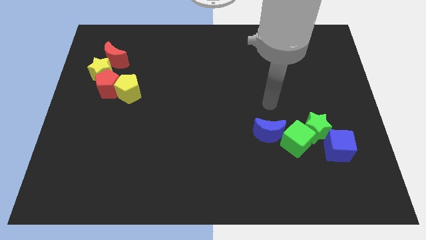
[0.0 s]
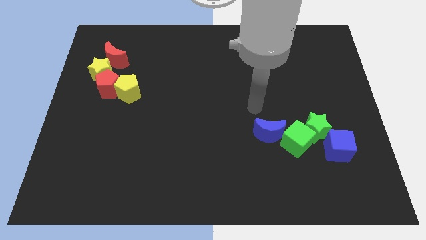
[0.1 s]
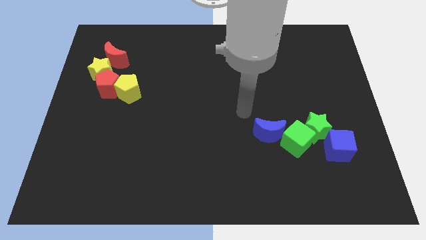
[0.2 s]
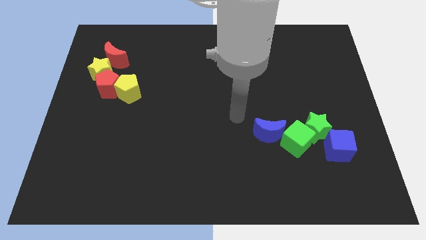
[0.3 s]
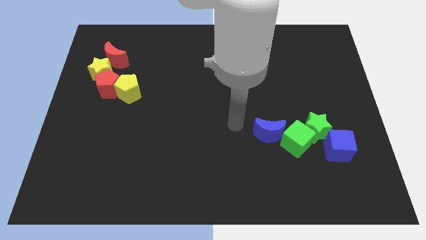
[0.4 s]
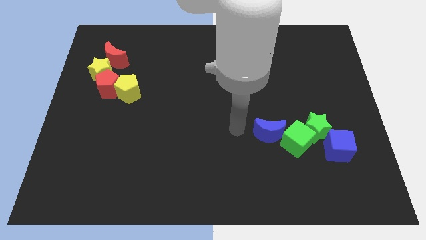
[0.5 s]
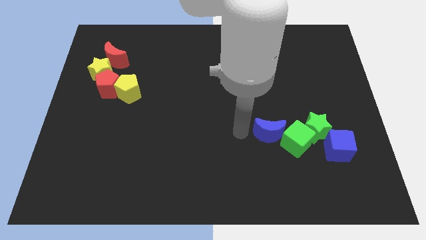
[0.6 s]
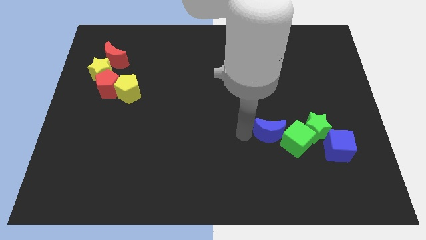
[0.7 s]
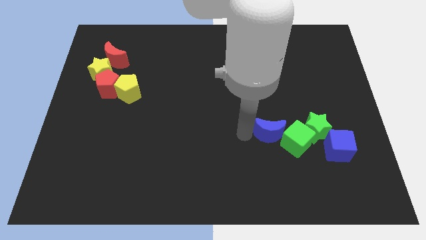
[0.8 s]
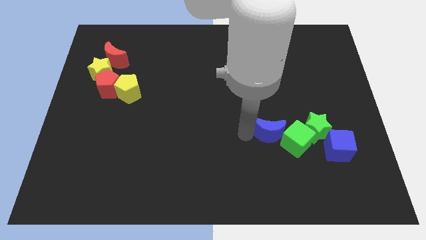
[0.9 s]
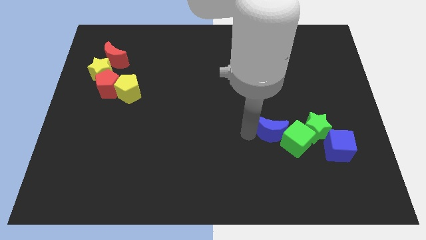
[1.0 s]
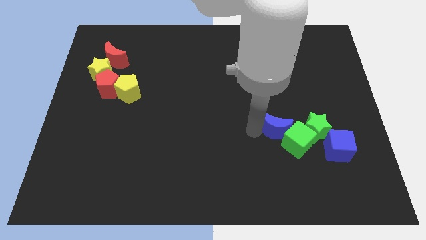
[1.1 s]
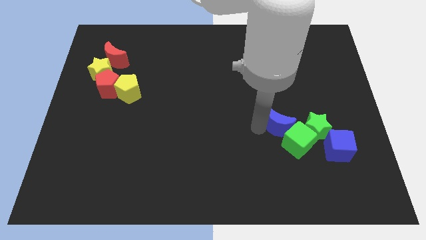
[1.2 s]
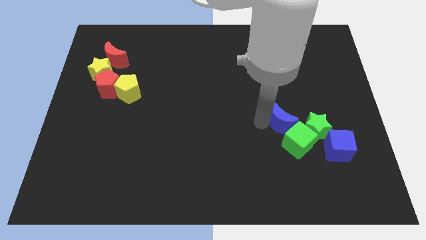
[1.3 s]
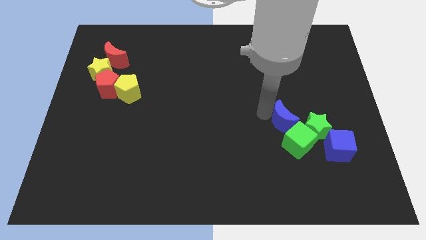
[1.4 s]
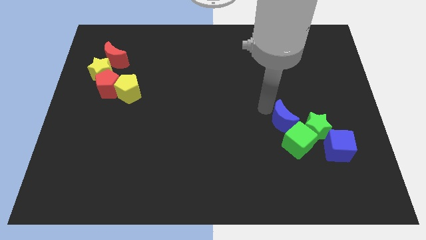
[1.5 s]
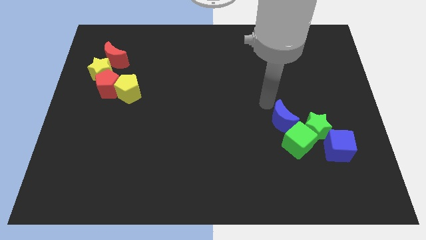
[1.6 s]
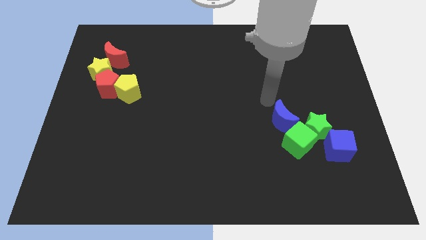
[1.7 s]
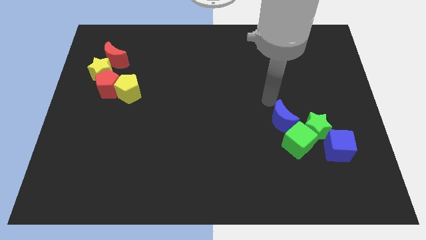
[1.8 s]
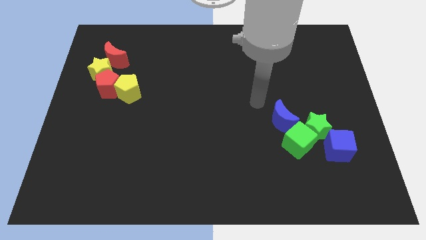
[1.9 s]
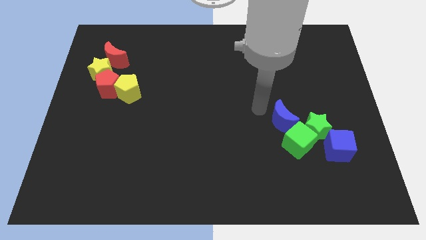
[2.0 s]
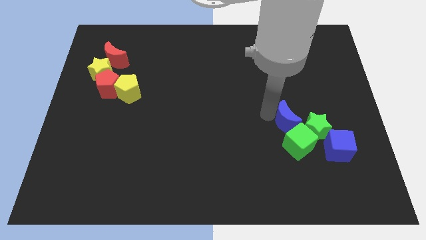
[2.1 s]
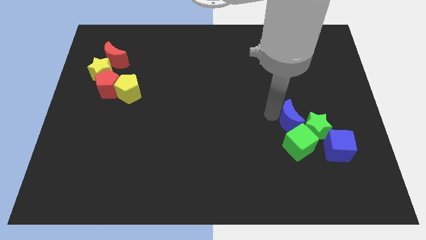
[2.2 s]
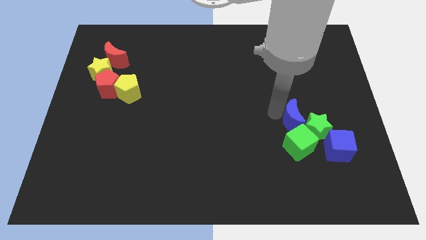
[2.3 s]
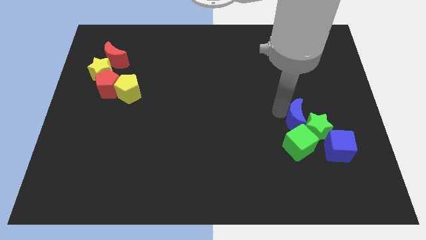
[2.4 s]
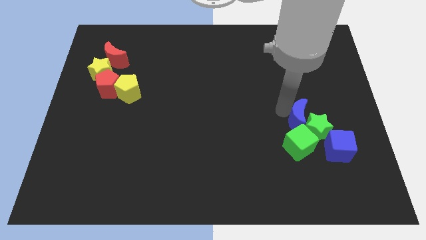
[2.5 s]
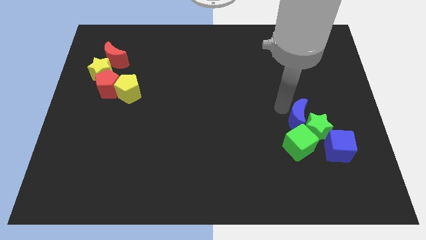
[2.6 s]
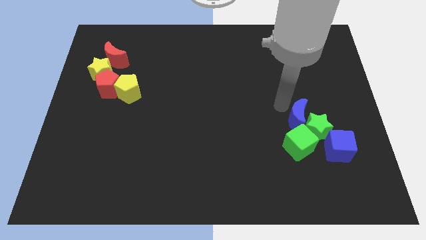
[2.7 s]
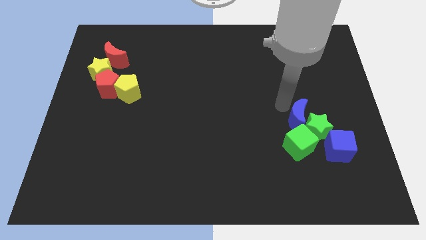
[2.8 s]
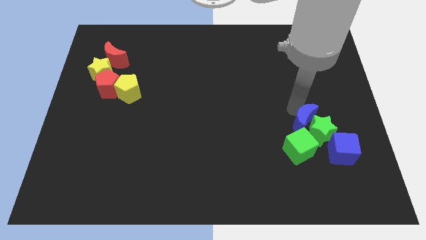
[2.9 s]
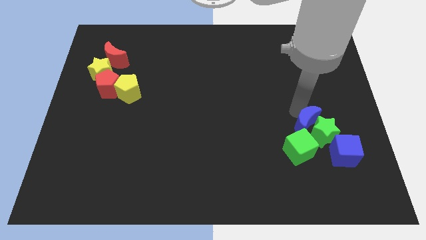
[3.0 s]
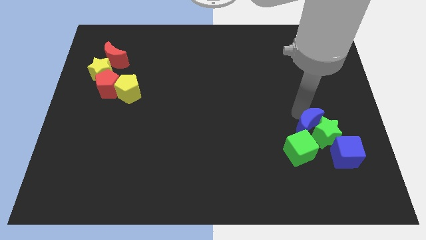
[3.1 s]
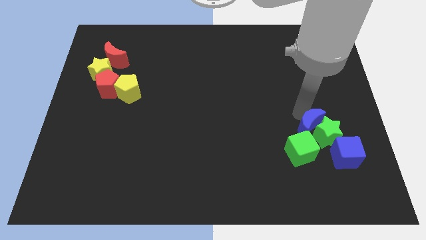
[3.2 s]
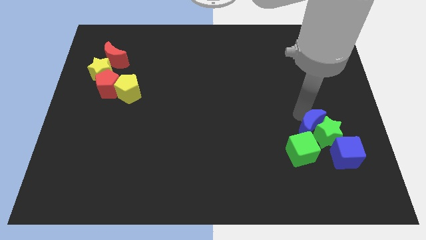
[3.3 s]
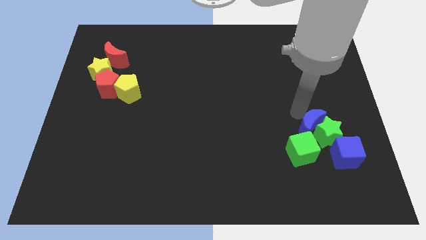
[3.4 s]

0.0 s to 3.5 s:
push the blue moon into the green star

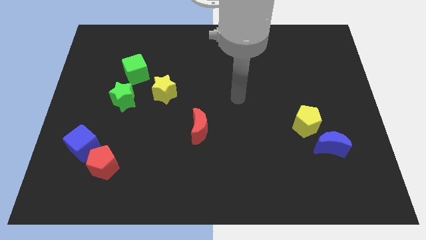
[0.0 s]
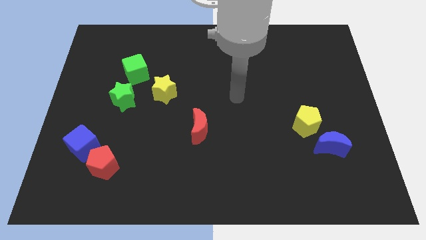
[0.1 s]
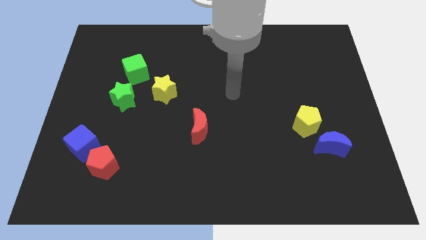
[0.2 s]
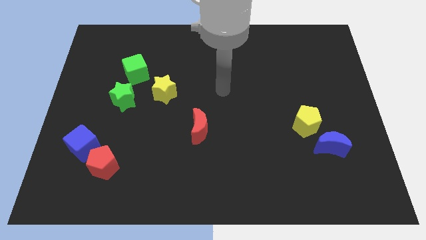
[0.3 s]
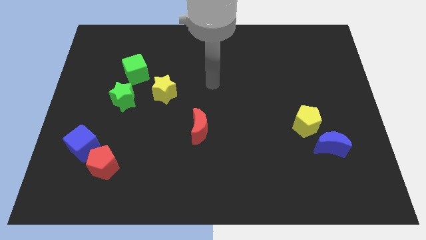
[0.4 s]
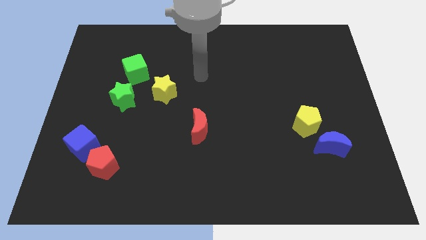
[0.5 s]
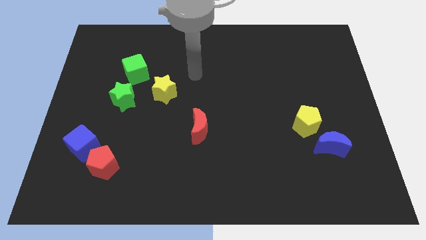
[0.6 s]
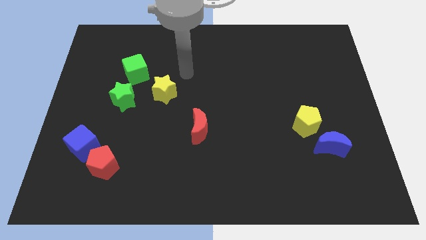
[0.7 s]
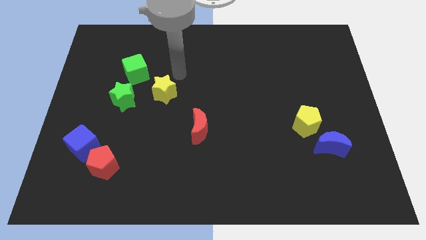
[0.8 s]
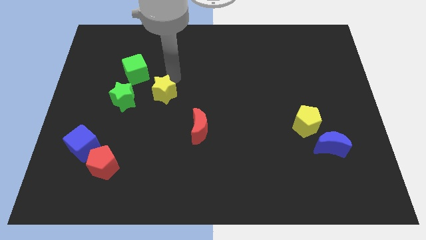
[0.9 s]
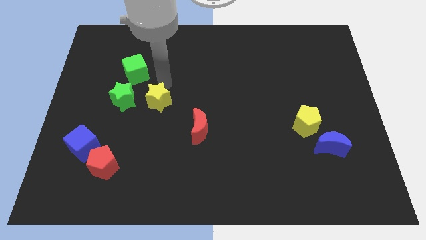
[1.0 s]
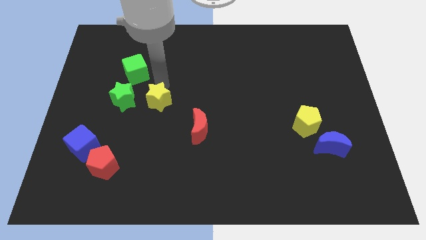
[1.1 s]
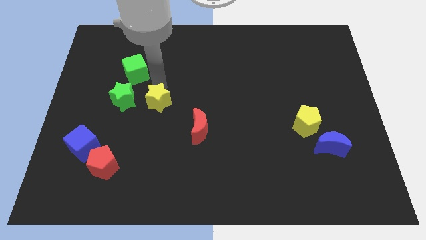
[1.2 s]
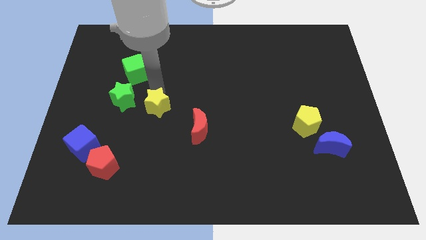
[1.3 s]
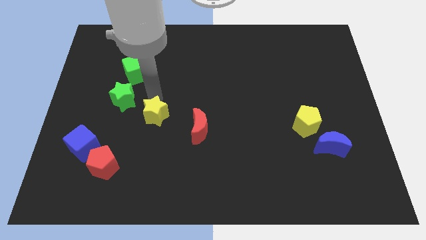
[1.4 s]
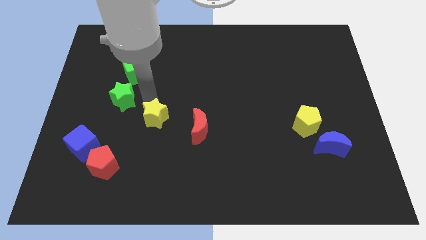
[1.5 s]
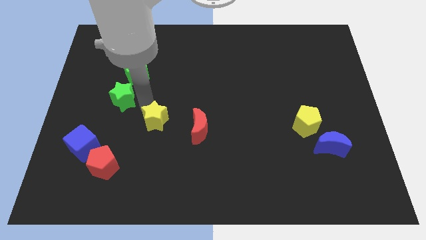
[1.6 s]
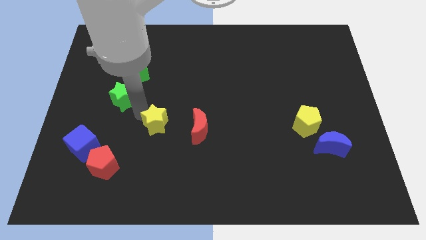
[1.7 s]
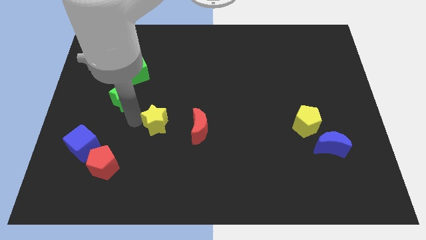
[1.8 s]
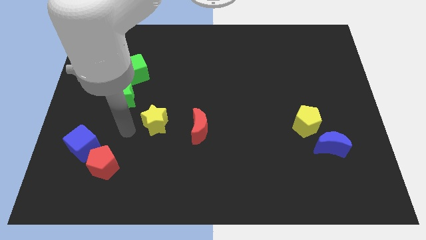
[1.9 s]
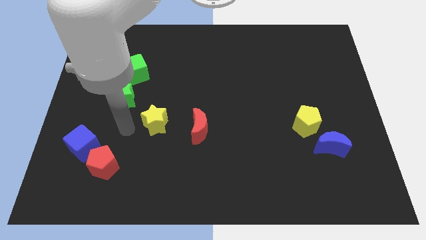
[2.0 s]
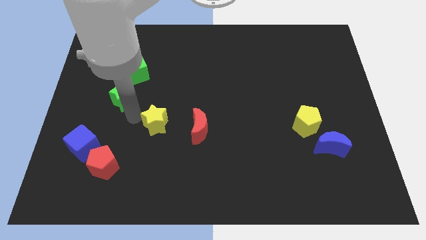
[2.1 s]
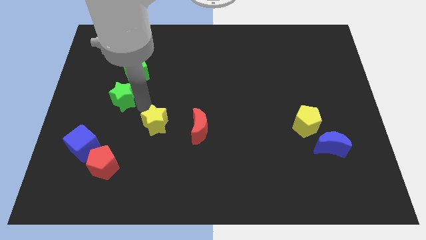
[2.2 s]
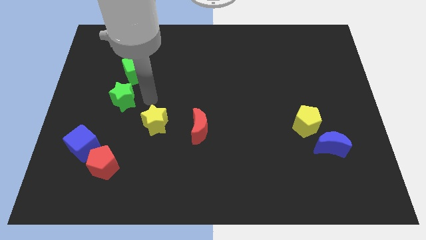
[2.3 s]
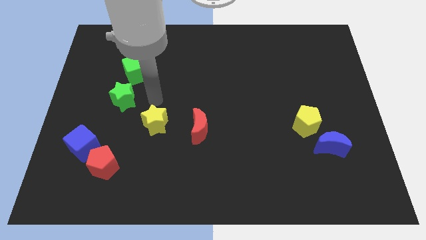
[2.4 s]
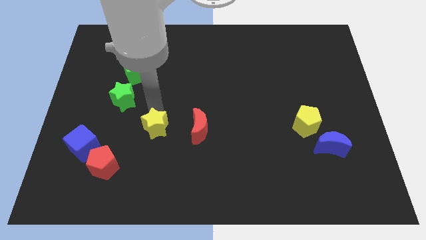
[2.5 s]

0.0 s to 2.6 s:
place the yellow star parallel to the red moon

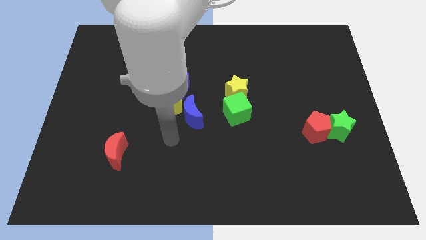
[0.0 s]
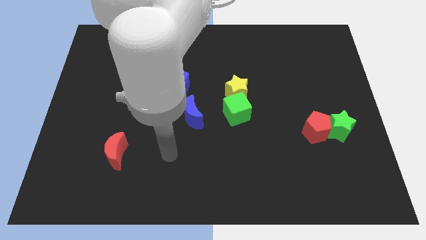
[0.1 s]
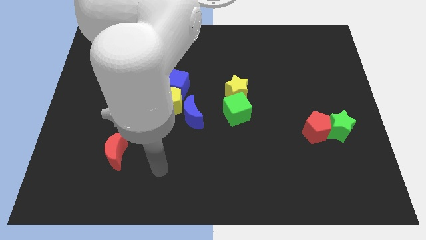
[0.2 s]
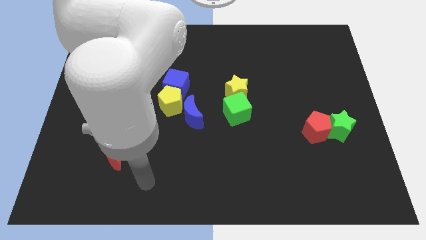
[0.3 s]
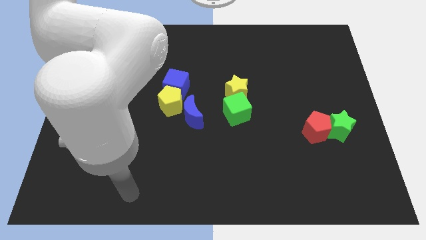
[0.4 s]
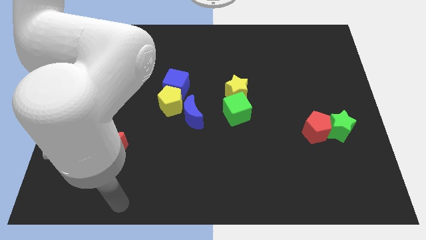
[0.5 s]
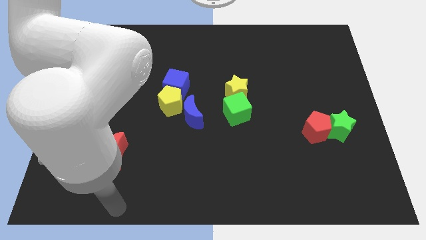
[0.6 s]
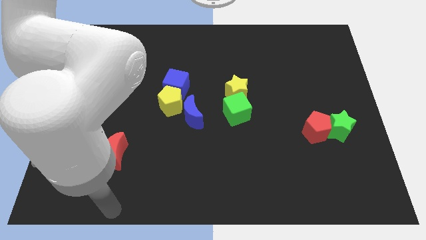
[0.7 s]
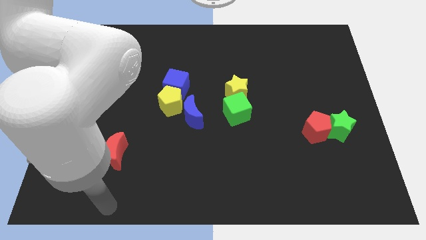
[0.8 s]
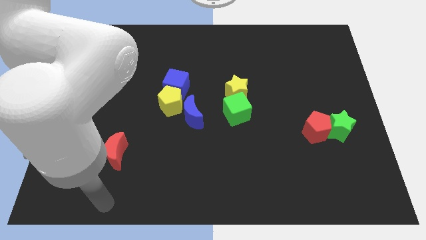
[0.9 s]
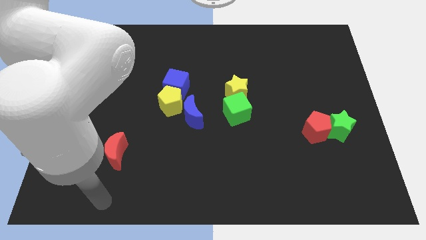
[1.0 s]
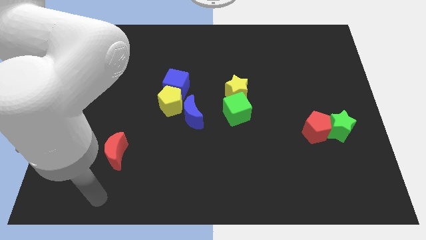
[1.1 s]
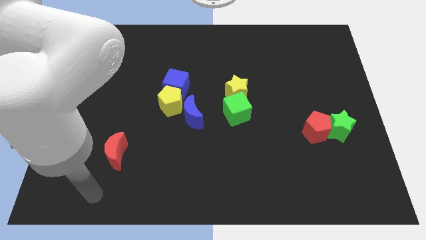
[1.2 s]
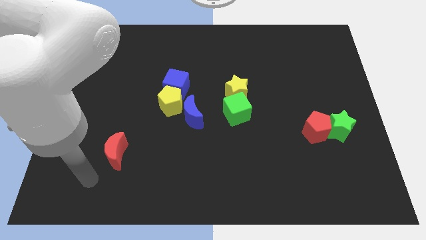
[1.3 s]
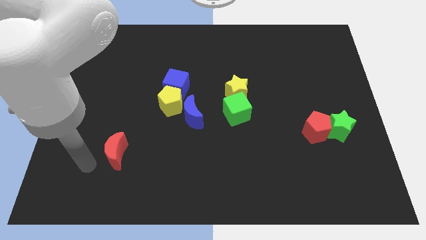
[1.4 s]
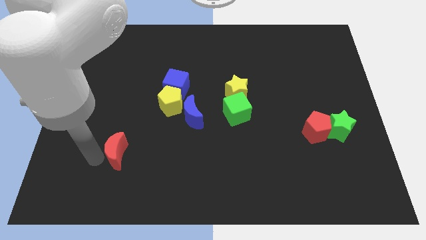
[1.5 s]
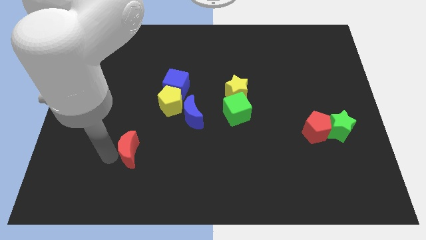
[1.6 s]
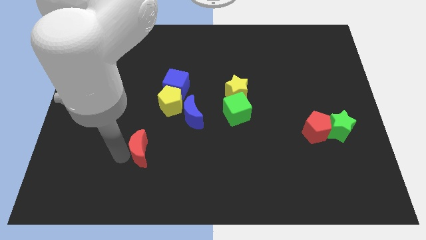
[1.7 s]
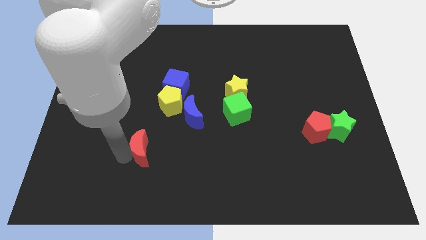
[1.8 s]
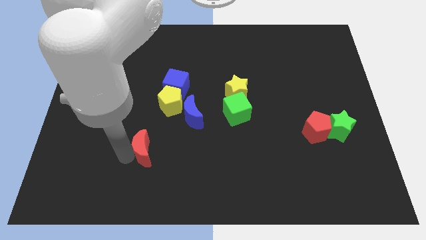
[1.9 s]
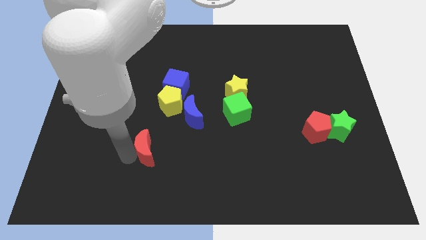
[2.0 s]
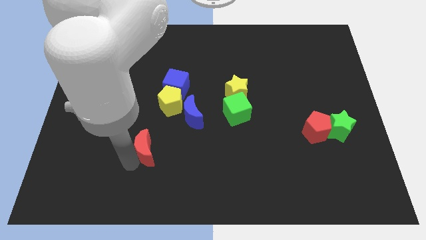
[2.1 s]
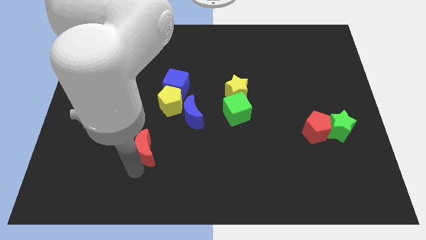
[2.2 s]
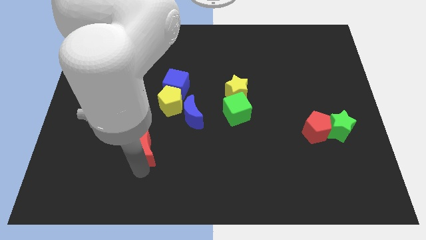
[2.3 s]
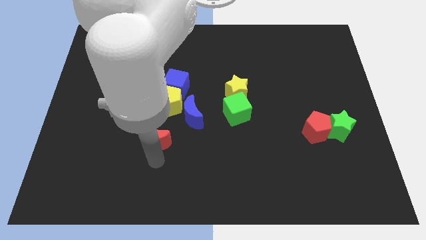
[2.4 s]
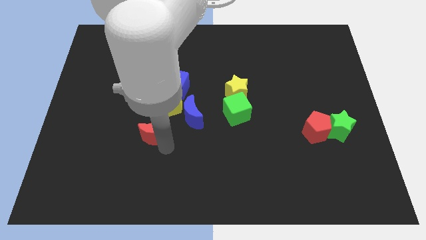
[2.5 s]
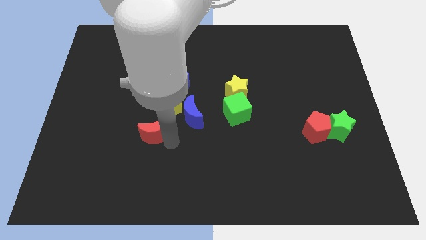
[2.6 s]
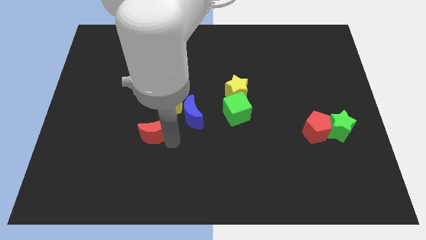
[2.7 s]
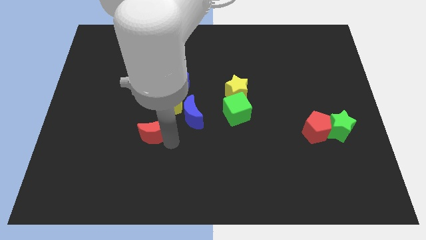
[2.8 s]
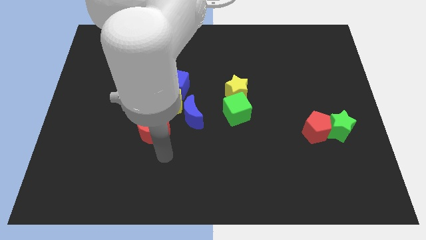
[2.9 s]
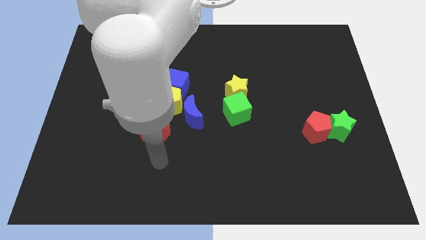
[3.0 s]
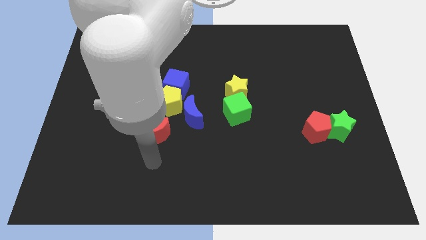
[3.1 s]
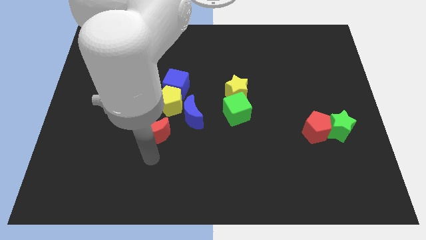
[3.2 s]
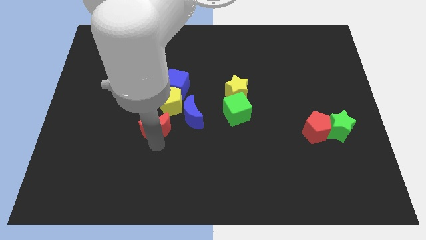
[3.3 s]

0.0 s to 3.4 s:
move the red crescent to the bottom of the yellow pentagon
